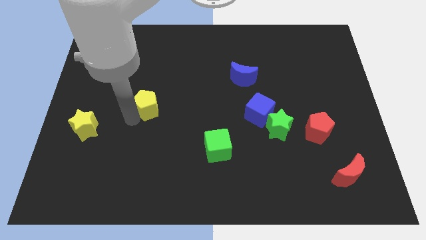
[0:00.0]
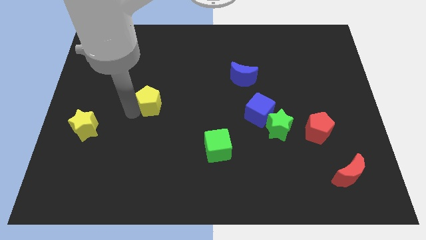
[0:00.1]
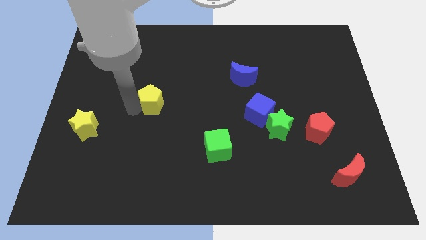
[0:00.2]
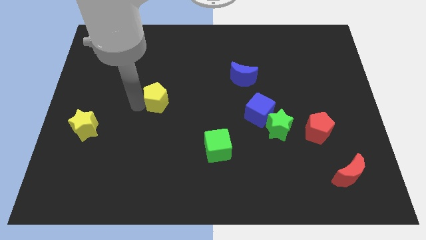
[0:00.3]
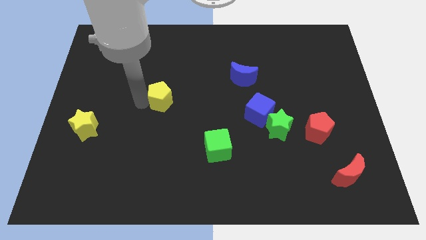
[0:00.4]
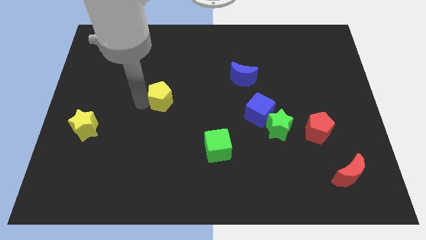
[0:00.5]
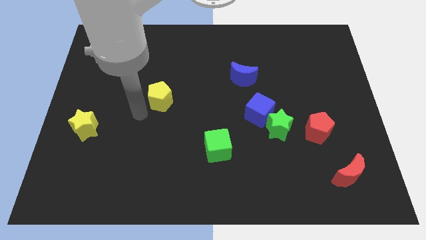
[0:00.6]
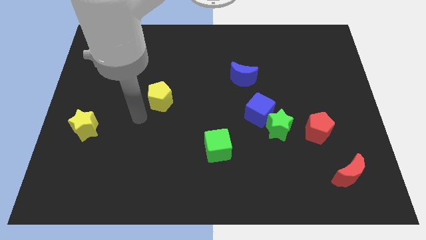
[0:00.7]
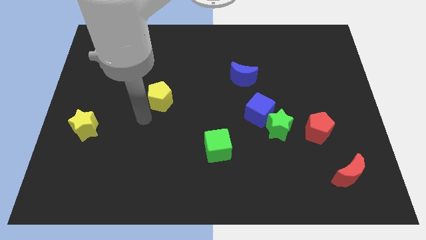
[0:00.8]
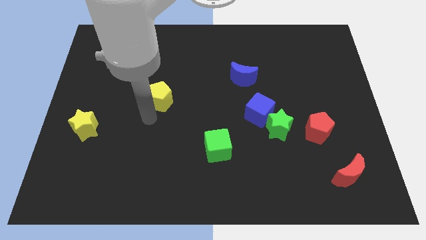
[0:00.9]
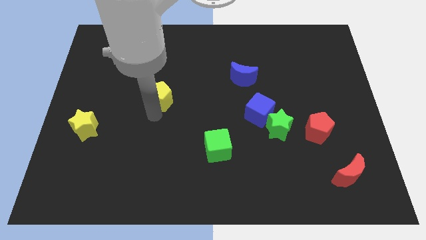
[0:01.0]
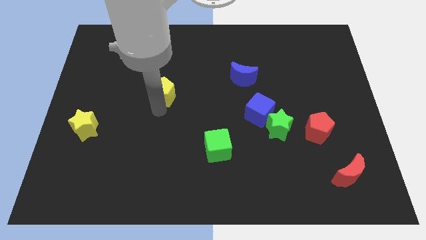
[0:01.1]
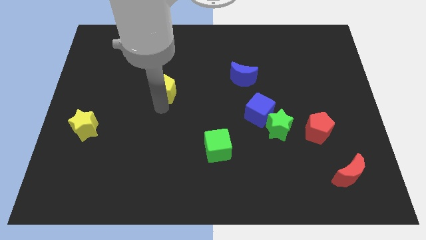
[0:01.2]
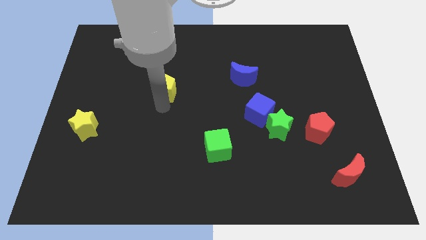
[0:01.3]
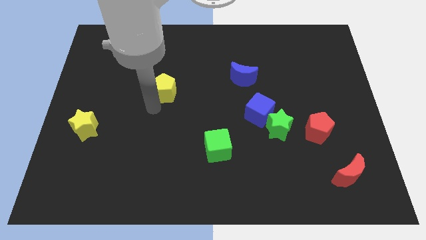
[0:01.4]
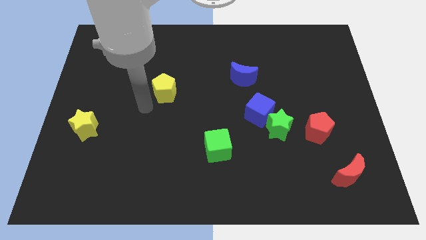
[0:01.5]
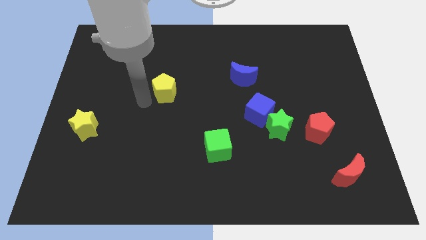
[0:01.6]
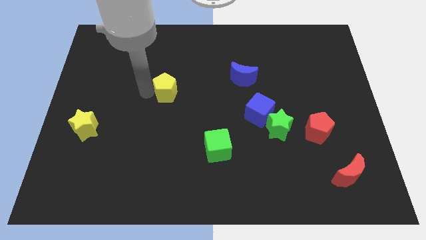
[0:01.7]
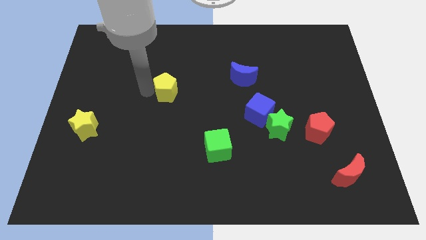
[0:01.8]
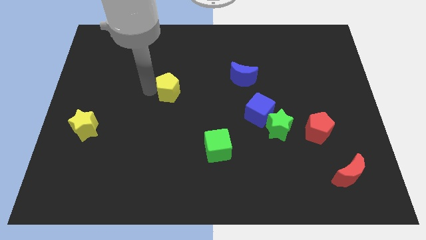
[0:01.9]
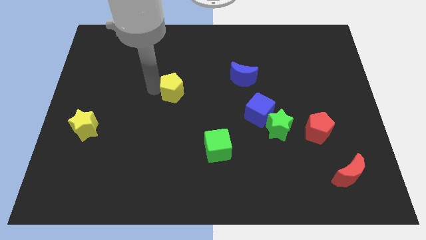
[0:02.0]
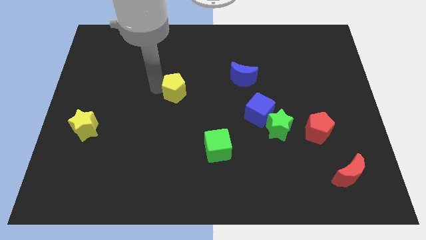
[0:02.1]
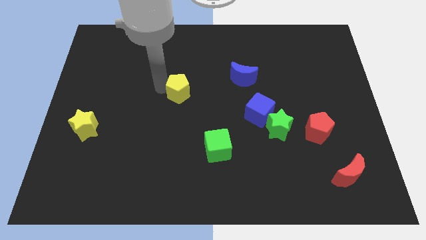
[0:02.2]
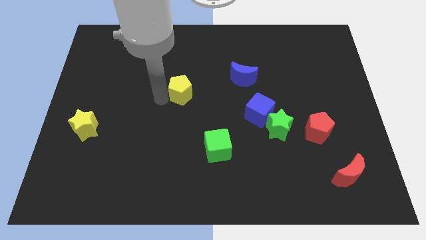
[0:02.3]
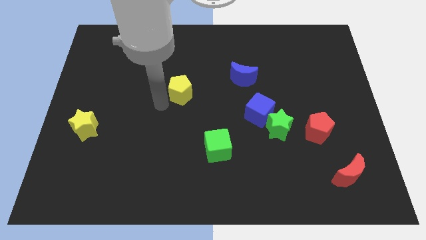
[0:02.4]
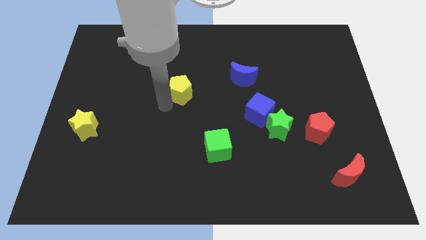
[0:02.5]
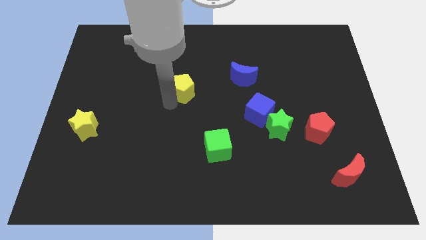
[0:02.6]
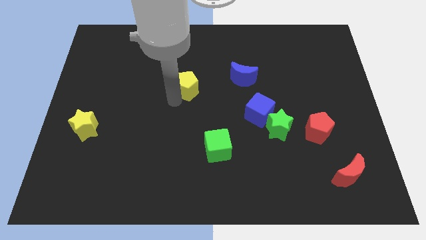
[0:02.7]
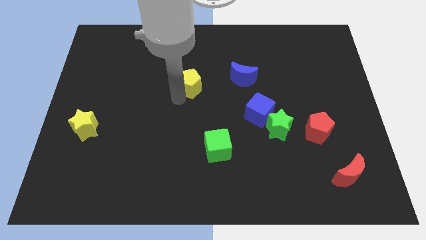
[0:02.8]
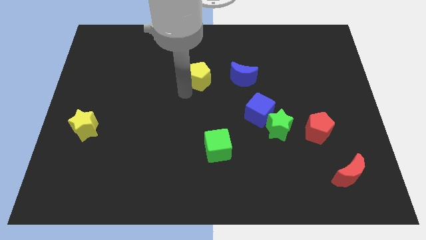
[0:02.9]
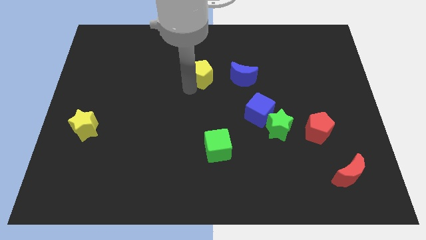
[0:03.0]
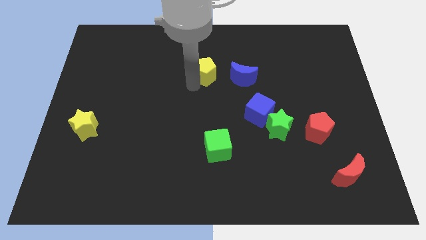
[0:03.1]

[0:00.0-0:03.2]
slide the yellow pentagon left to the blue moon

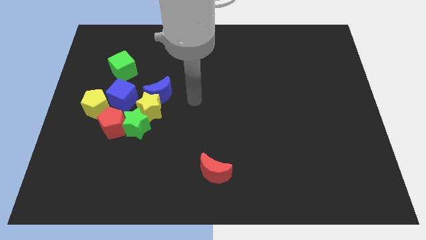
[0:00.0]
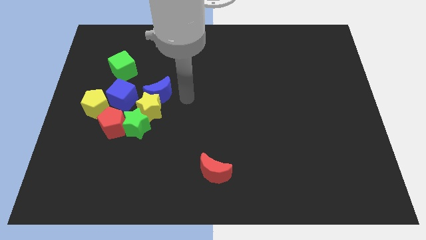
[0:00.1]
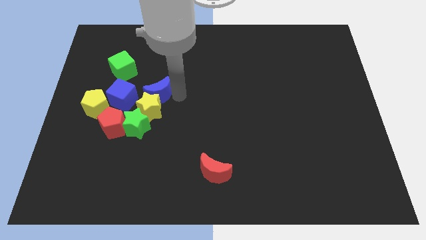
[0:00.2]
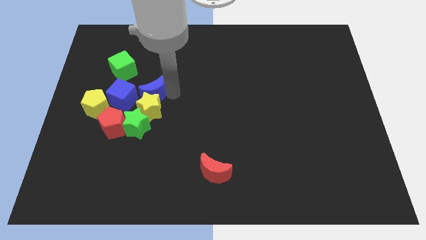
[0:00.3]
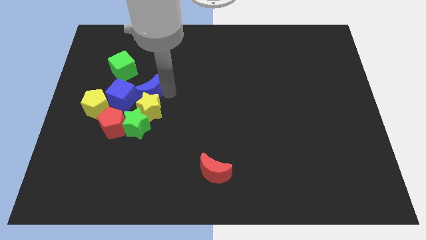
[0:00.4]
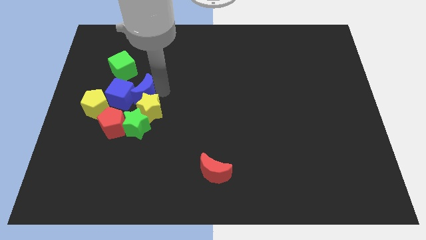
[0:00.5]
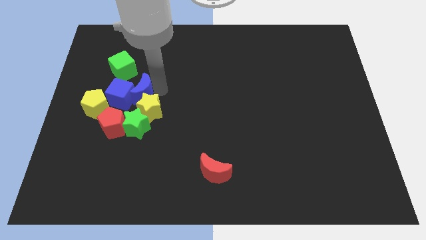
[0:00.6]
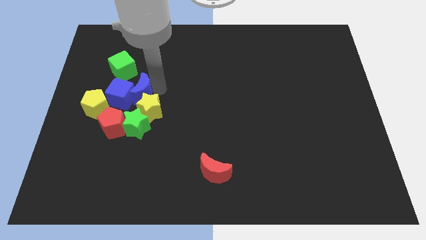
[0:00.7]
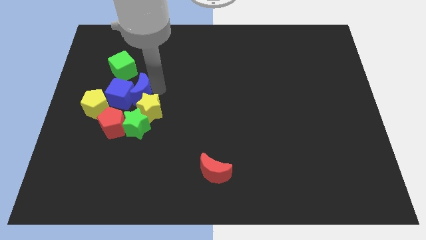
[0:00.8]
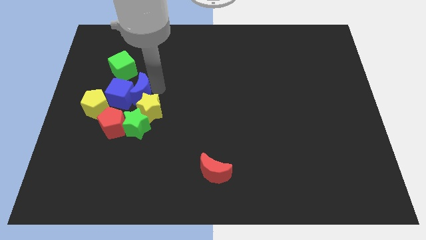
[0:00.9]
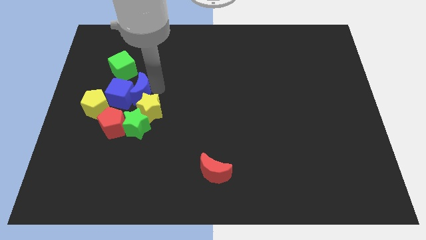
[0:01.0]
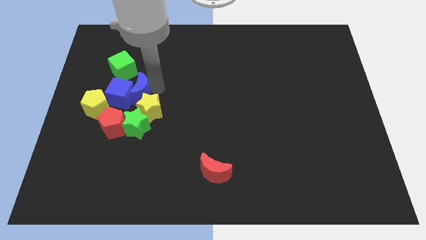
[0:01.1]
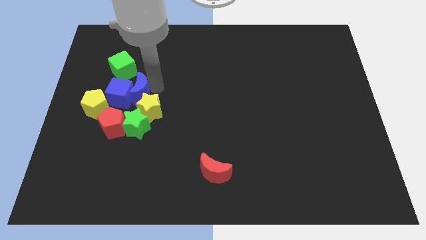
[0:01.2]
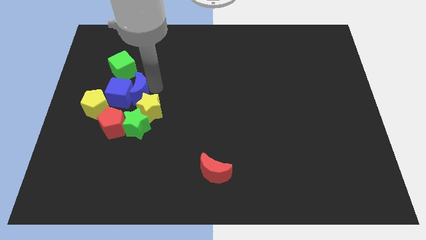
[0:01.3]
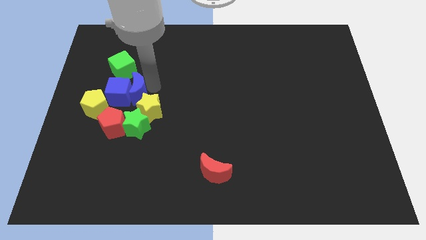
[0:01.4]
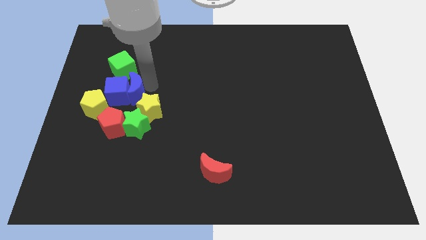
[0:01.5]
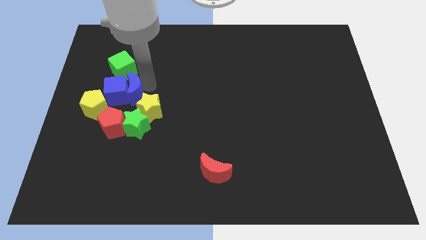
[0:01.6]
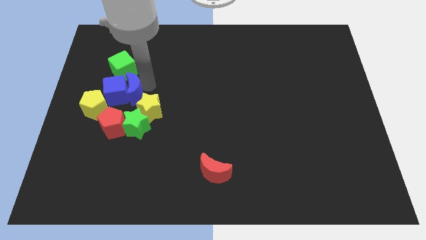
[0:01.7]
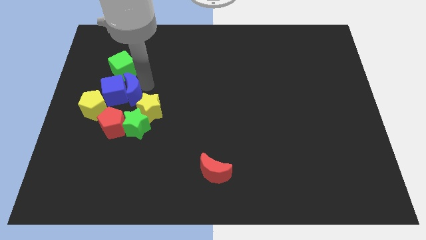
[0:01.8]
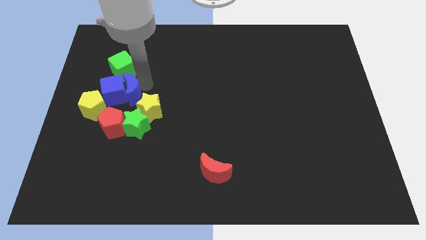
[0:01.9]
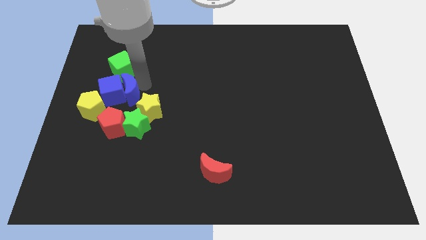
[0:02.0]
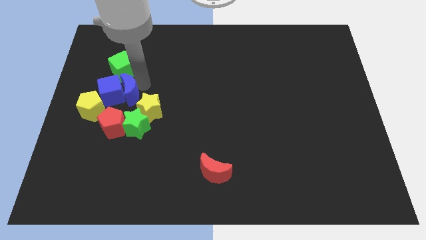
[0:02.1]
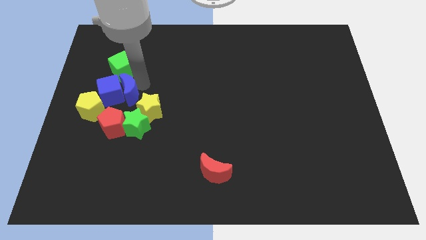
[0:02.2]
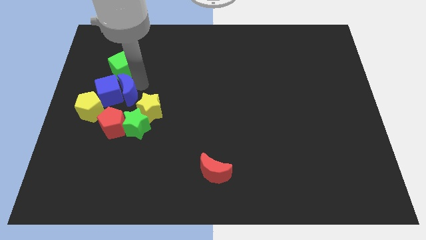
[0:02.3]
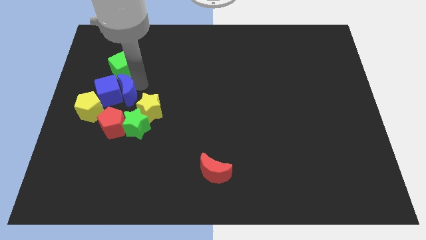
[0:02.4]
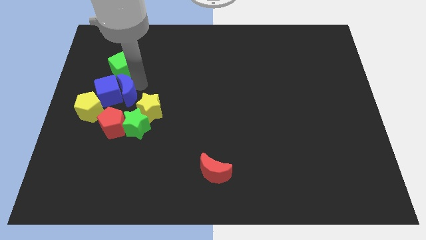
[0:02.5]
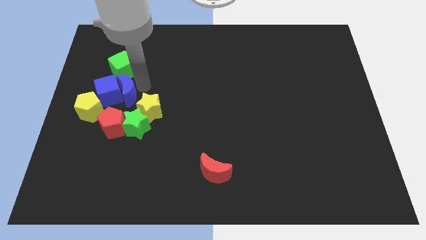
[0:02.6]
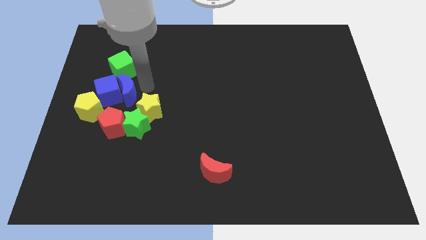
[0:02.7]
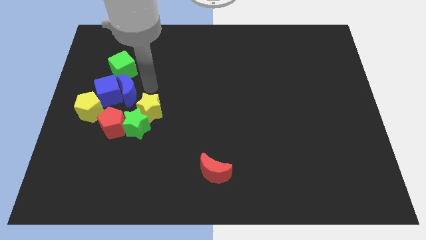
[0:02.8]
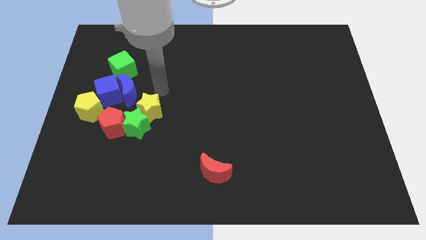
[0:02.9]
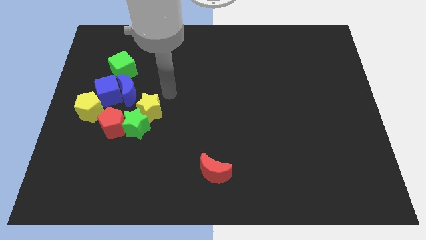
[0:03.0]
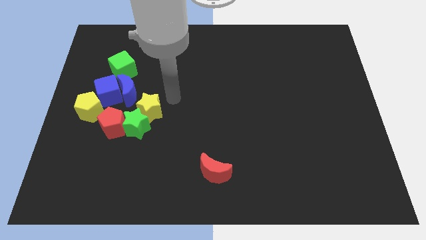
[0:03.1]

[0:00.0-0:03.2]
push the blue moon into the blue cube

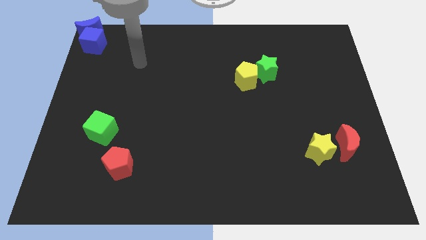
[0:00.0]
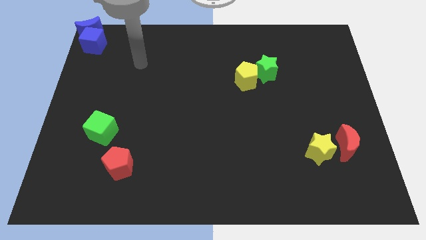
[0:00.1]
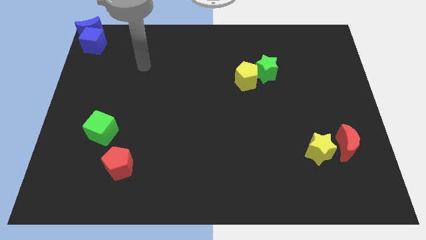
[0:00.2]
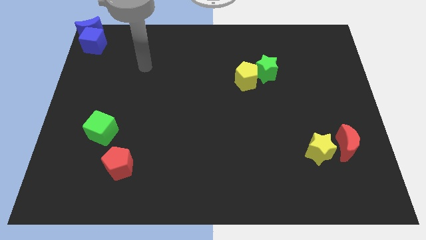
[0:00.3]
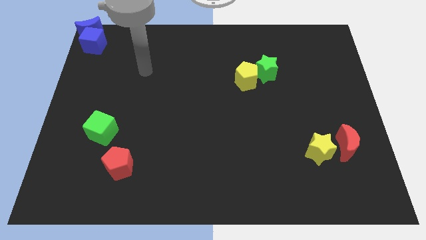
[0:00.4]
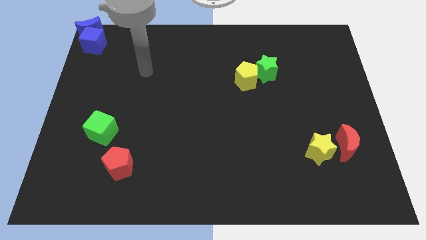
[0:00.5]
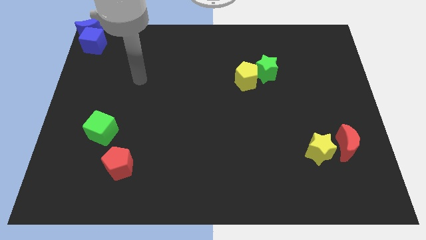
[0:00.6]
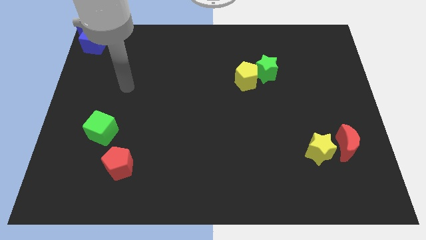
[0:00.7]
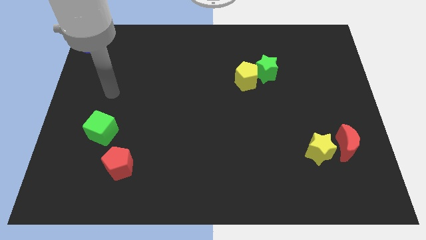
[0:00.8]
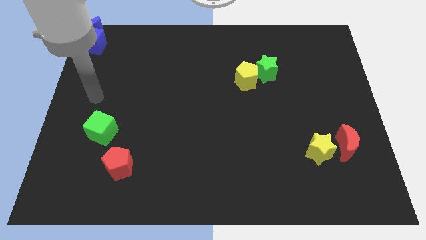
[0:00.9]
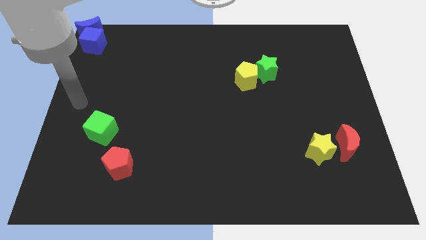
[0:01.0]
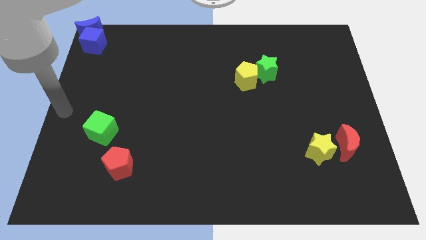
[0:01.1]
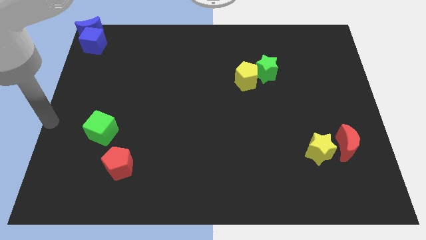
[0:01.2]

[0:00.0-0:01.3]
place arm to the center left of the board

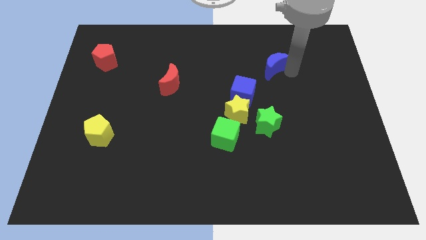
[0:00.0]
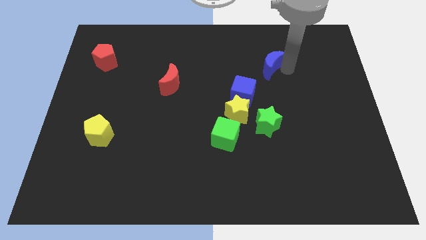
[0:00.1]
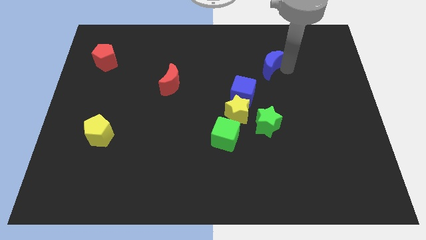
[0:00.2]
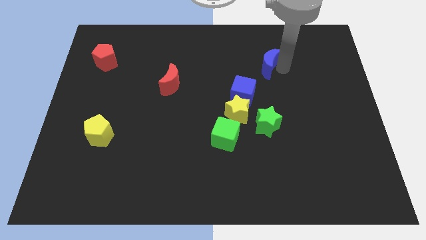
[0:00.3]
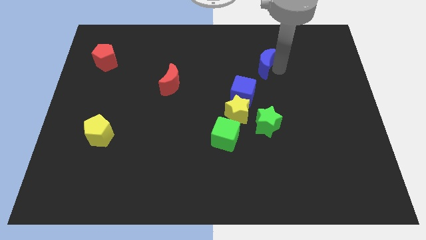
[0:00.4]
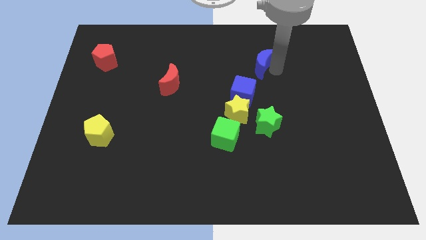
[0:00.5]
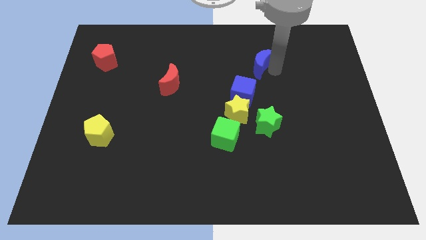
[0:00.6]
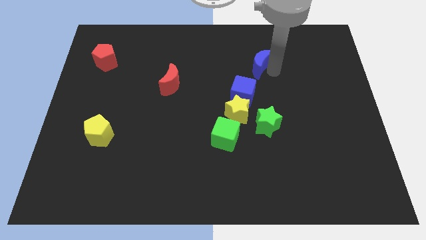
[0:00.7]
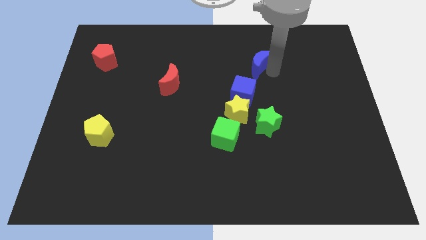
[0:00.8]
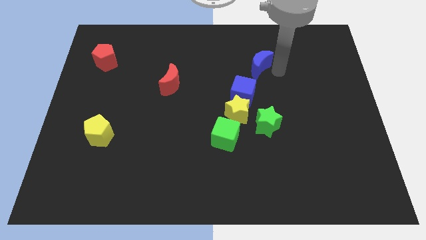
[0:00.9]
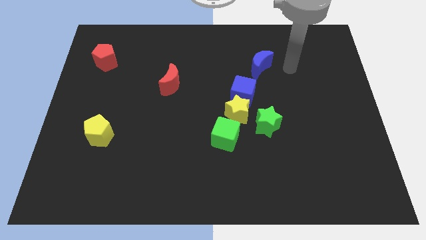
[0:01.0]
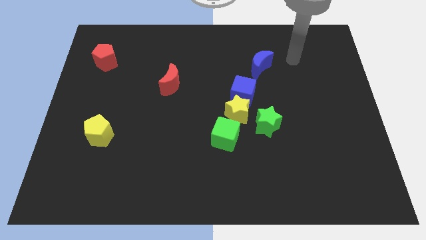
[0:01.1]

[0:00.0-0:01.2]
put the blue crescent on top of the blue cube

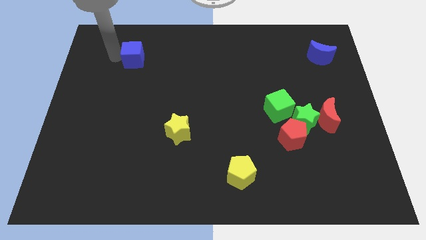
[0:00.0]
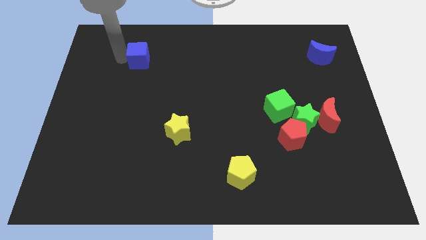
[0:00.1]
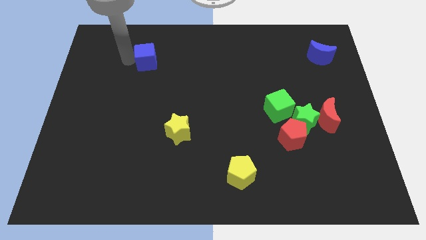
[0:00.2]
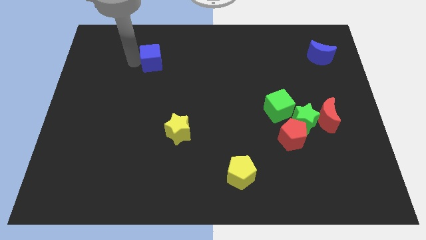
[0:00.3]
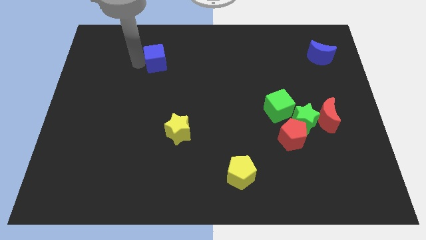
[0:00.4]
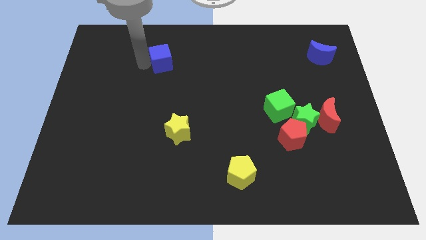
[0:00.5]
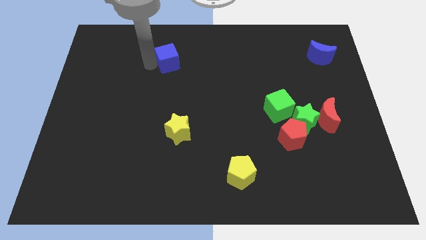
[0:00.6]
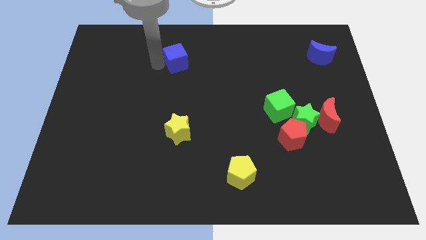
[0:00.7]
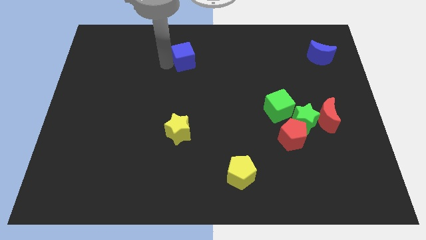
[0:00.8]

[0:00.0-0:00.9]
push blue cube above yellow star
